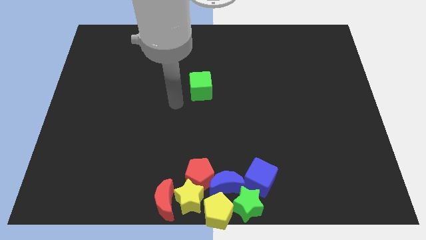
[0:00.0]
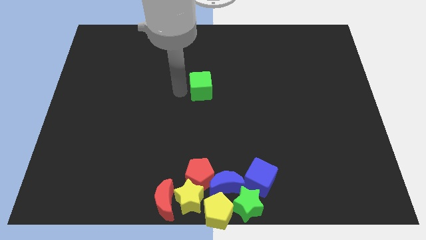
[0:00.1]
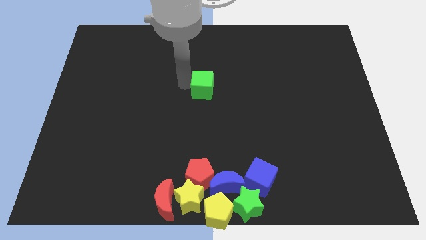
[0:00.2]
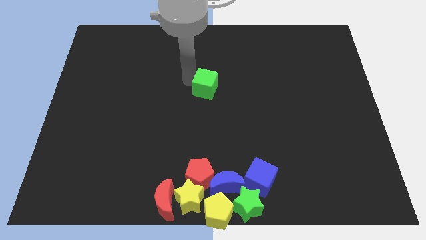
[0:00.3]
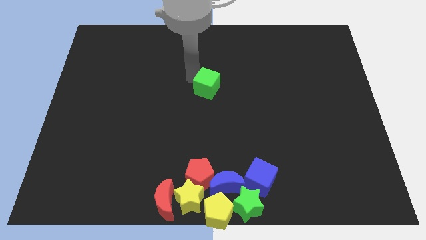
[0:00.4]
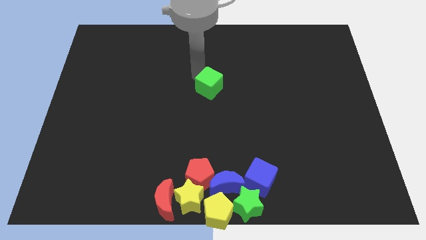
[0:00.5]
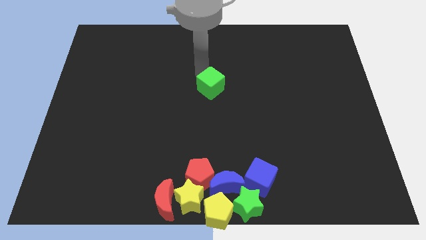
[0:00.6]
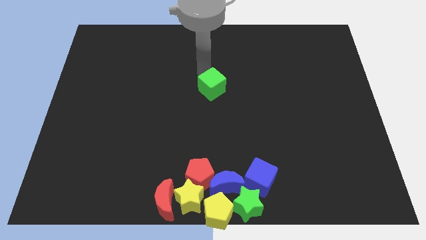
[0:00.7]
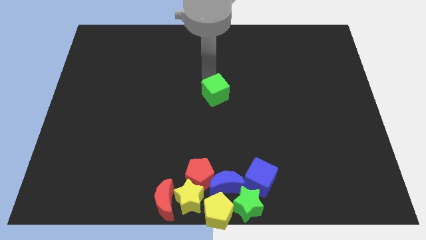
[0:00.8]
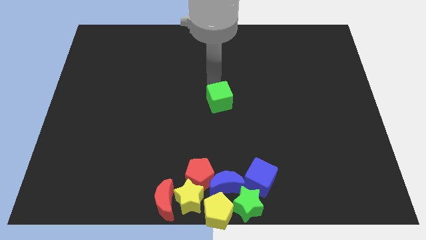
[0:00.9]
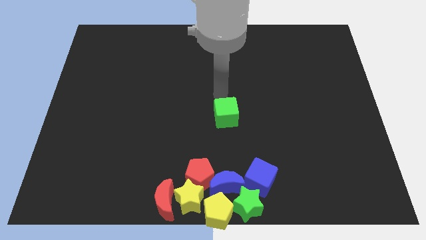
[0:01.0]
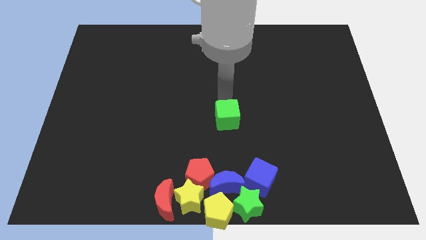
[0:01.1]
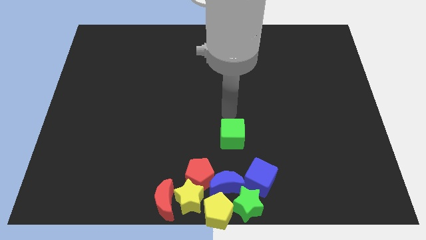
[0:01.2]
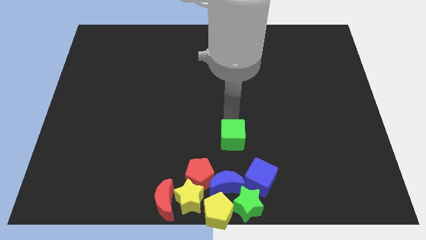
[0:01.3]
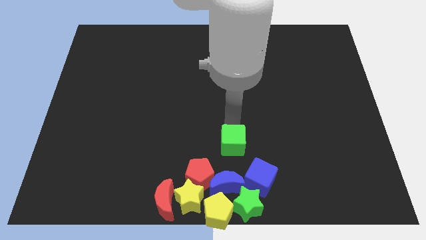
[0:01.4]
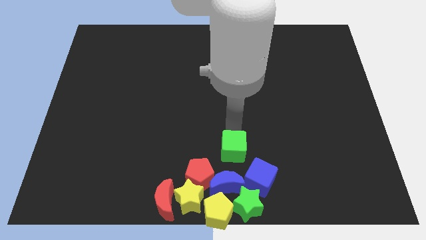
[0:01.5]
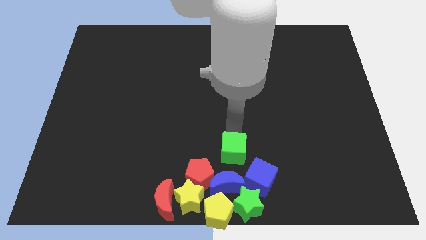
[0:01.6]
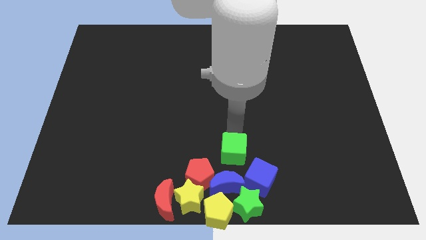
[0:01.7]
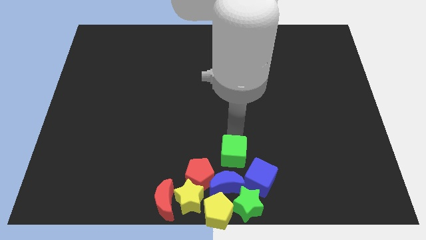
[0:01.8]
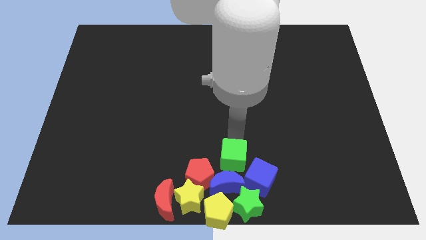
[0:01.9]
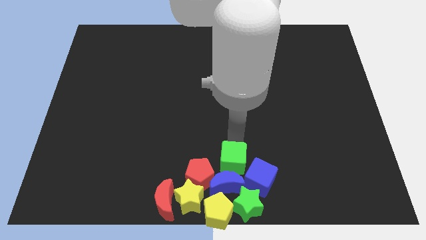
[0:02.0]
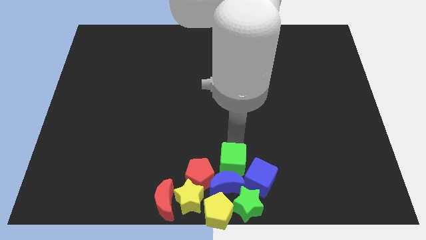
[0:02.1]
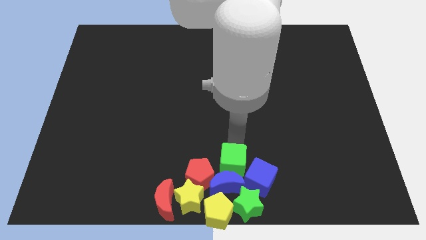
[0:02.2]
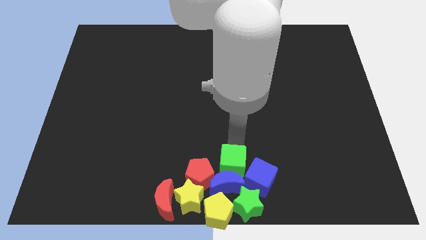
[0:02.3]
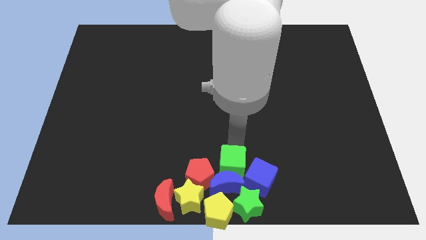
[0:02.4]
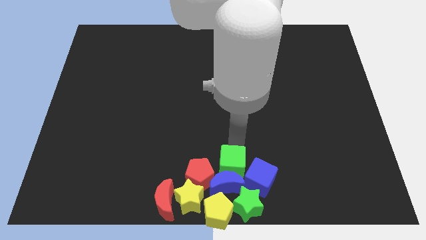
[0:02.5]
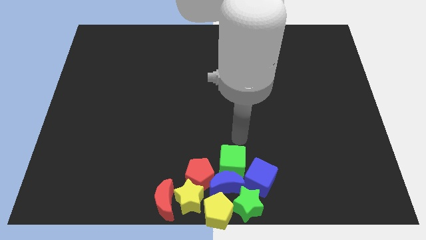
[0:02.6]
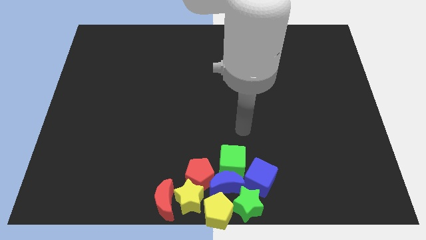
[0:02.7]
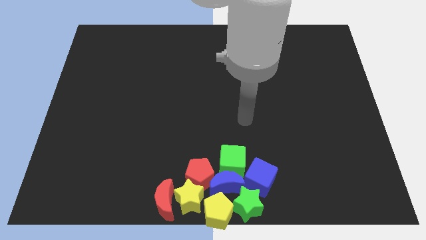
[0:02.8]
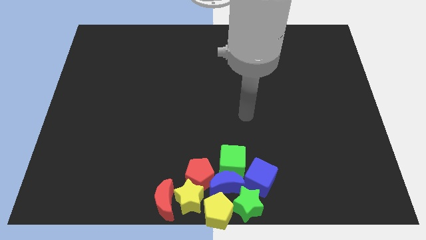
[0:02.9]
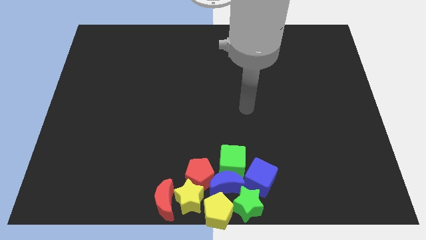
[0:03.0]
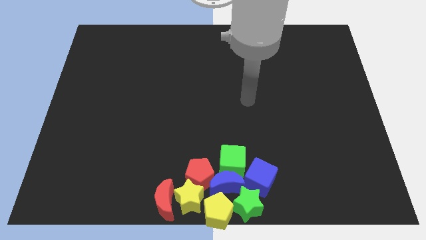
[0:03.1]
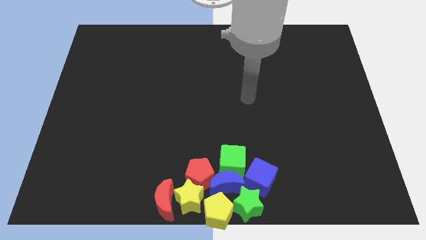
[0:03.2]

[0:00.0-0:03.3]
place the green cube above the group of blocks

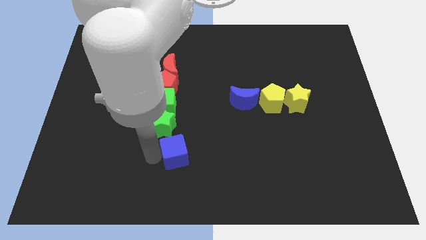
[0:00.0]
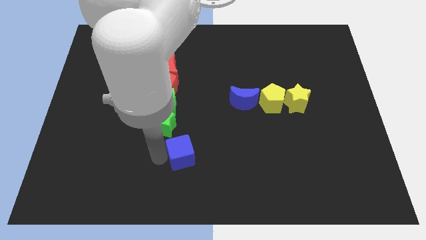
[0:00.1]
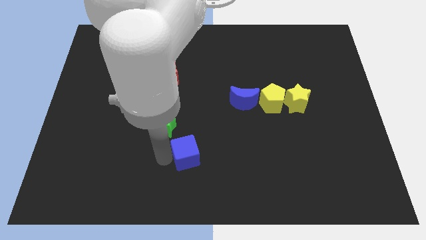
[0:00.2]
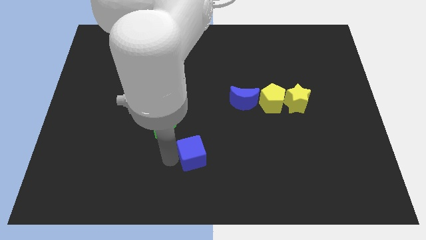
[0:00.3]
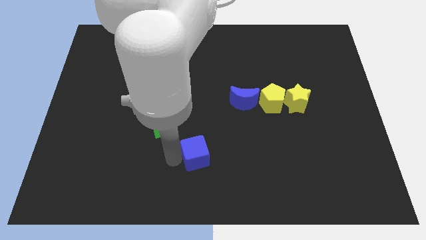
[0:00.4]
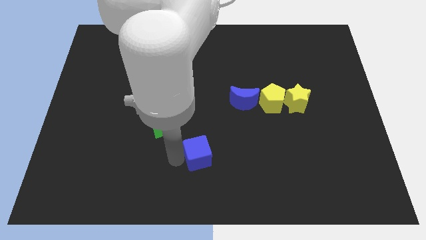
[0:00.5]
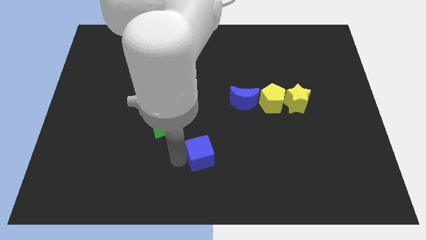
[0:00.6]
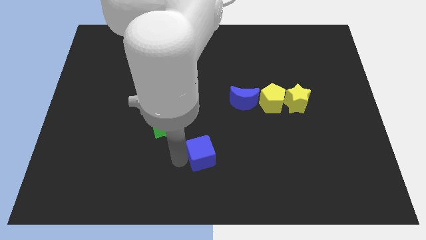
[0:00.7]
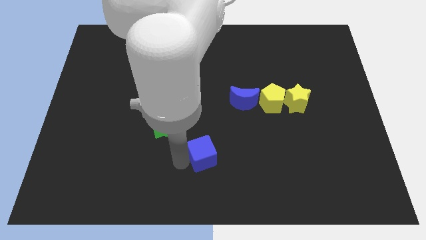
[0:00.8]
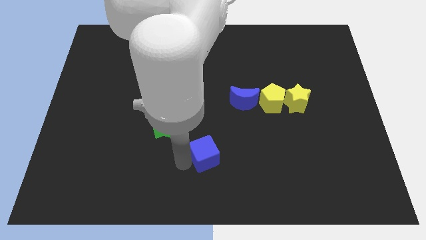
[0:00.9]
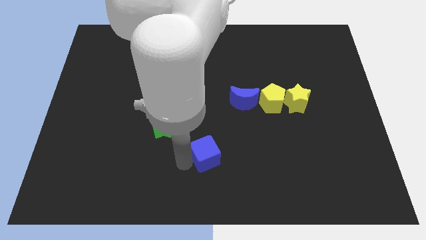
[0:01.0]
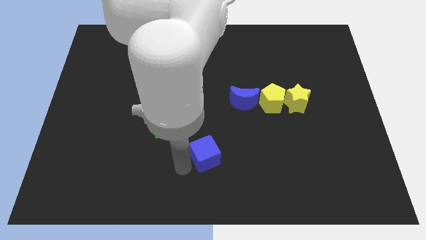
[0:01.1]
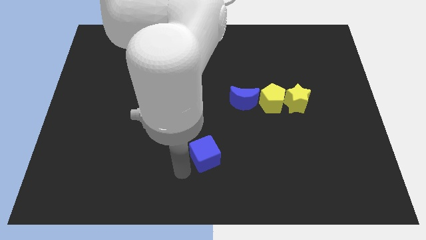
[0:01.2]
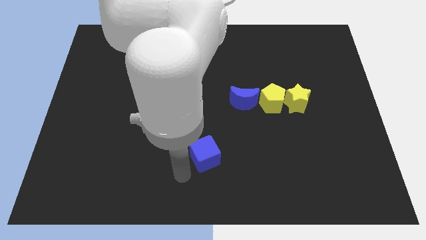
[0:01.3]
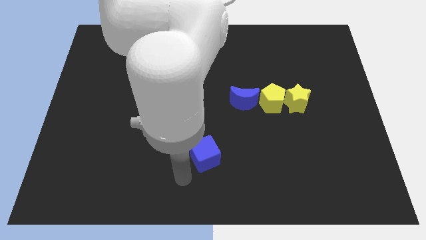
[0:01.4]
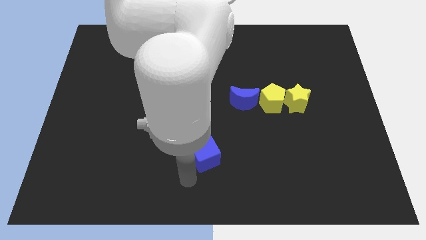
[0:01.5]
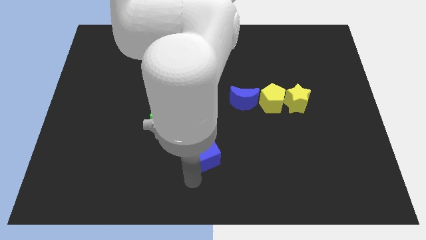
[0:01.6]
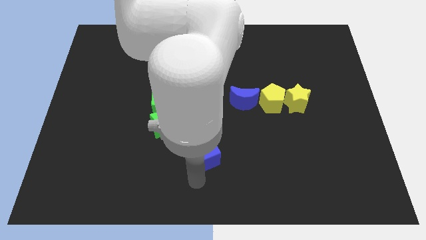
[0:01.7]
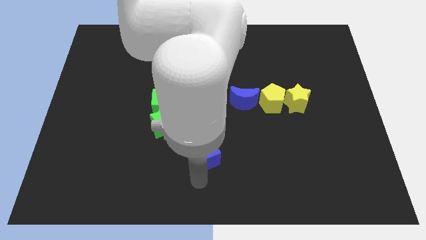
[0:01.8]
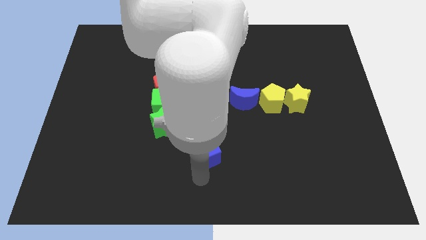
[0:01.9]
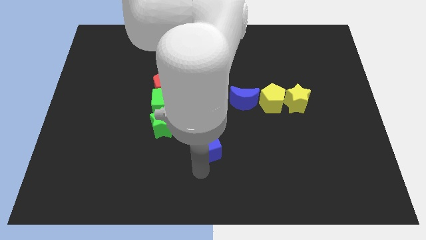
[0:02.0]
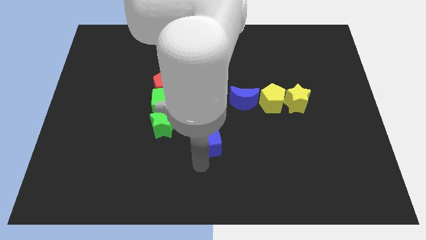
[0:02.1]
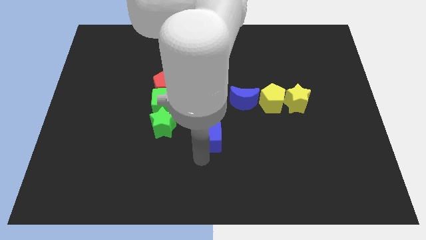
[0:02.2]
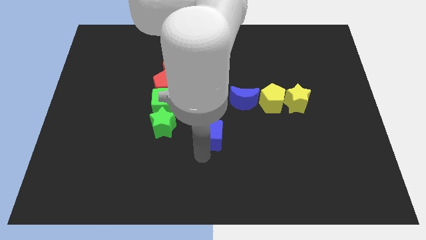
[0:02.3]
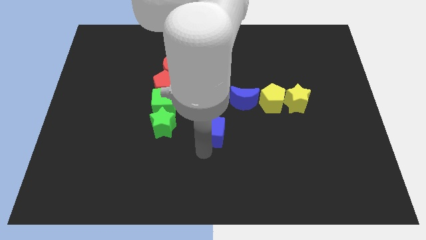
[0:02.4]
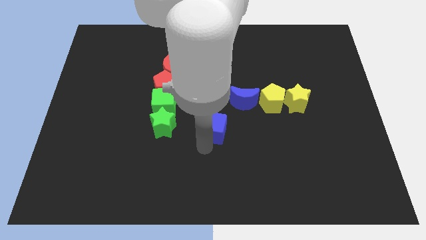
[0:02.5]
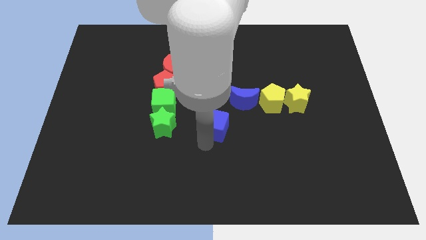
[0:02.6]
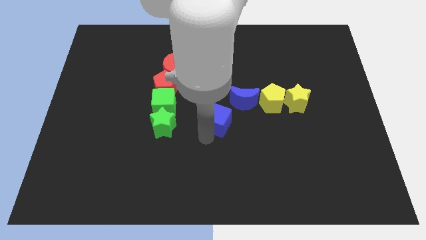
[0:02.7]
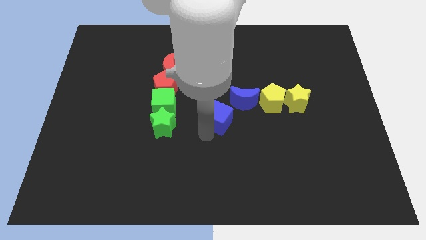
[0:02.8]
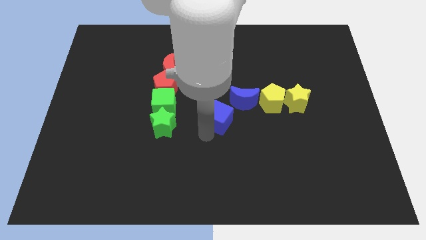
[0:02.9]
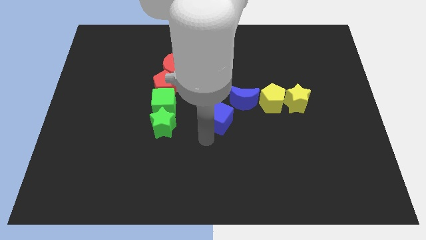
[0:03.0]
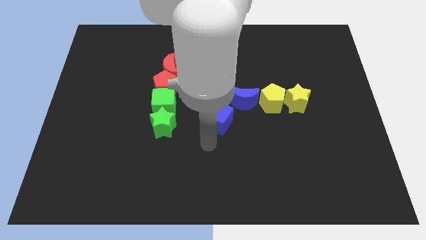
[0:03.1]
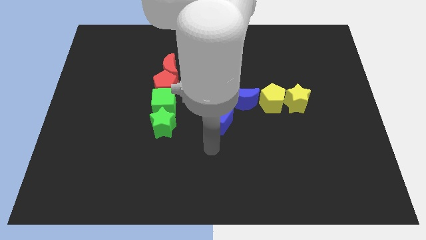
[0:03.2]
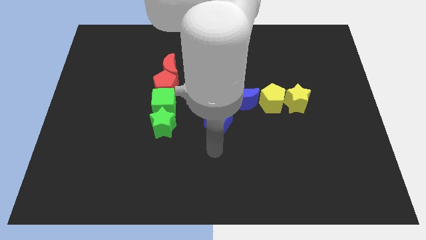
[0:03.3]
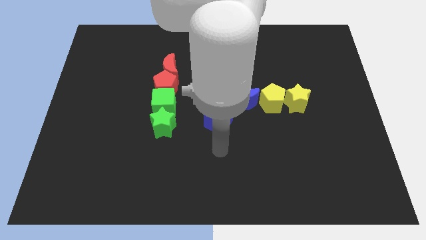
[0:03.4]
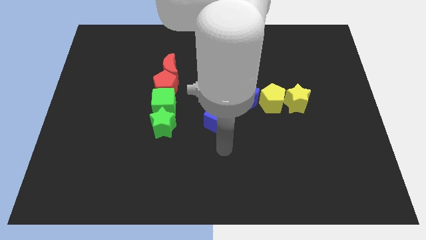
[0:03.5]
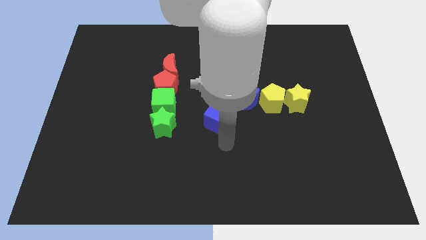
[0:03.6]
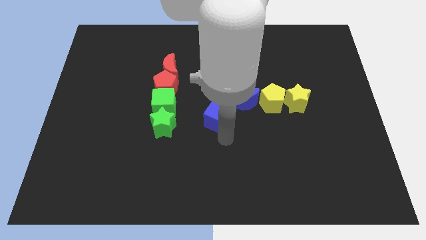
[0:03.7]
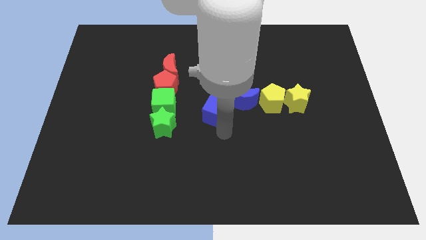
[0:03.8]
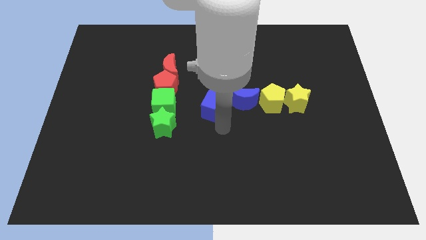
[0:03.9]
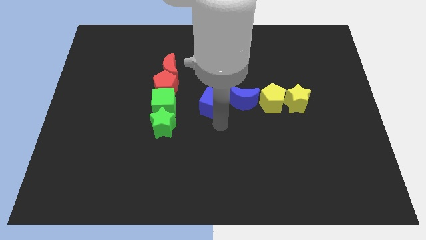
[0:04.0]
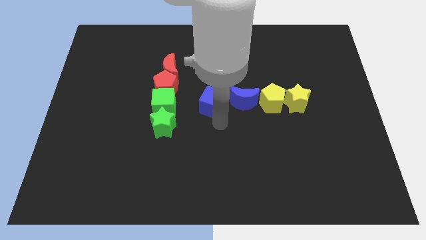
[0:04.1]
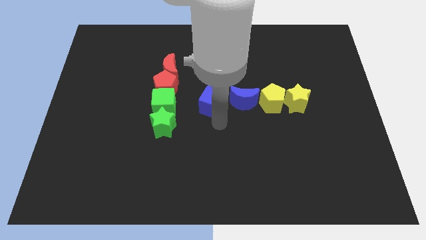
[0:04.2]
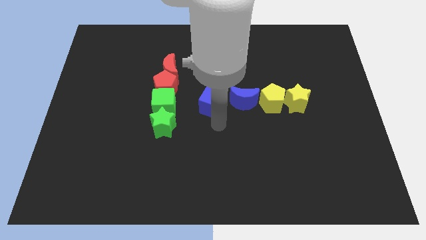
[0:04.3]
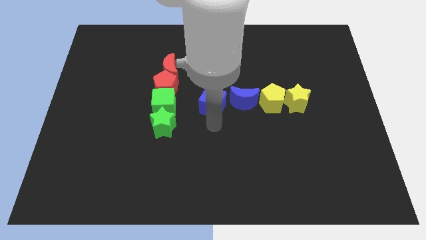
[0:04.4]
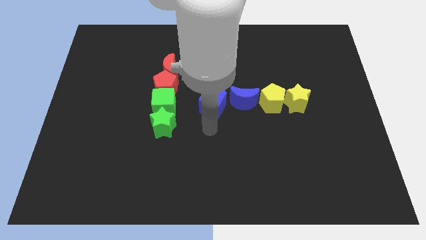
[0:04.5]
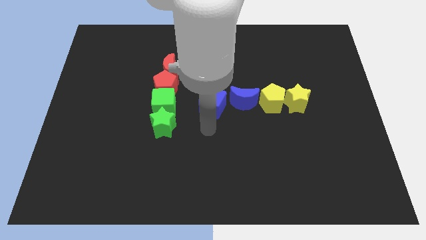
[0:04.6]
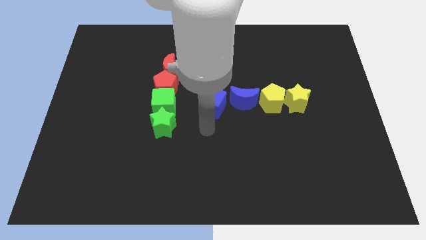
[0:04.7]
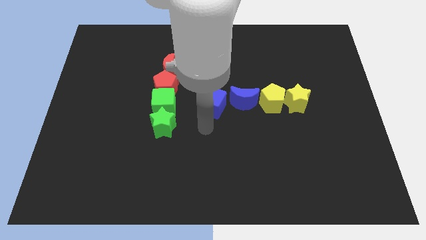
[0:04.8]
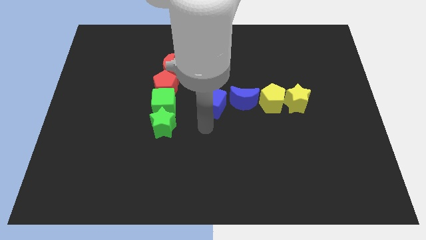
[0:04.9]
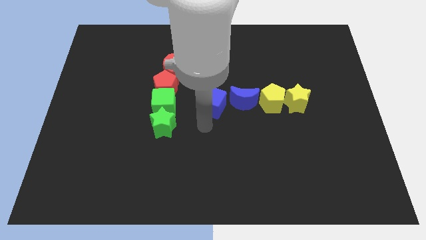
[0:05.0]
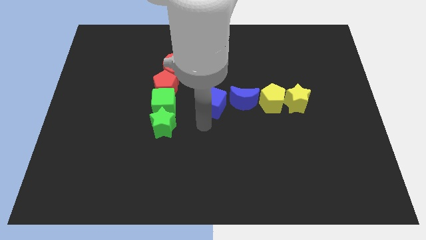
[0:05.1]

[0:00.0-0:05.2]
move the blue cube to the left of the blue crescent

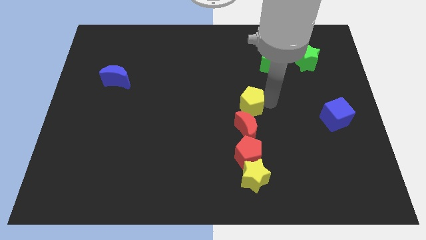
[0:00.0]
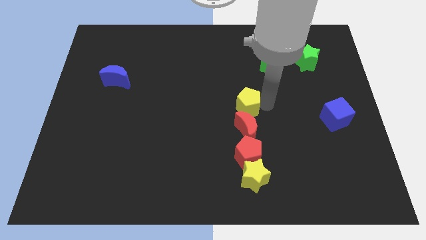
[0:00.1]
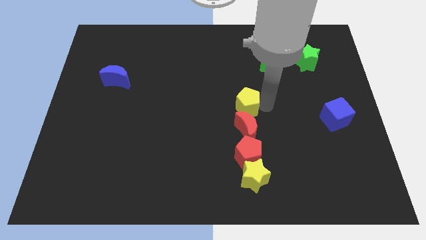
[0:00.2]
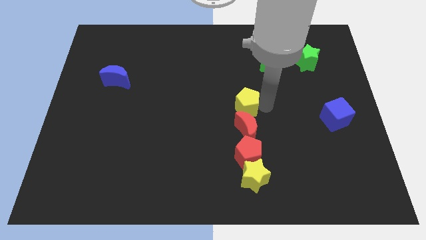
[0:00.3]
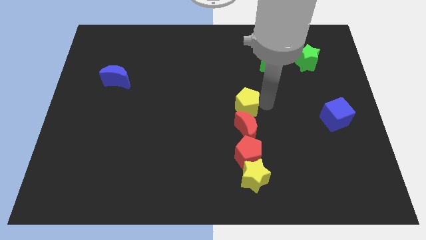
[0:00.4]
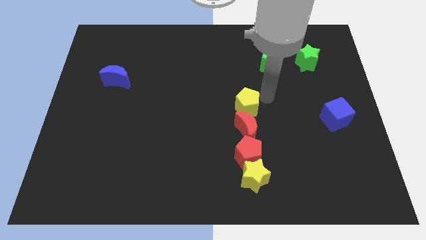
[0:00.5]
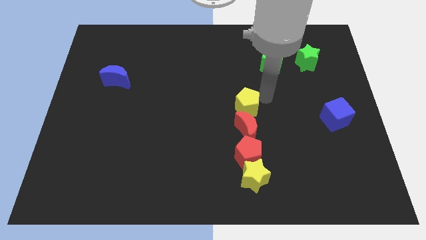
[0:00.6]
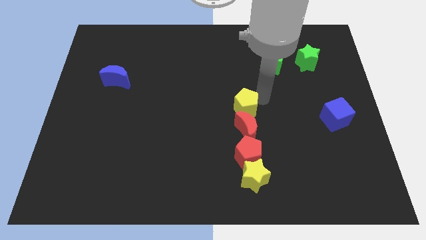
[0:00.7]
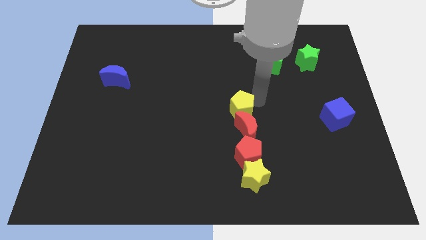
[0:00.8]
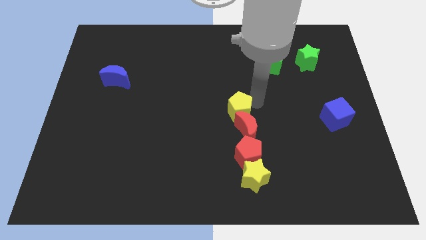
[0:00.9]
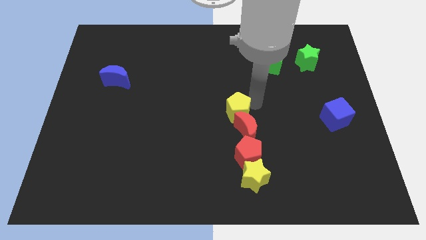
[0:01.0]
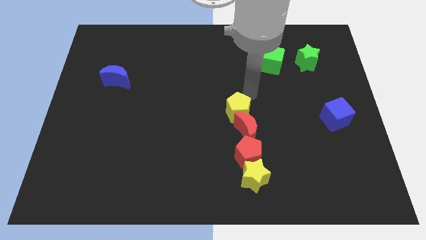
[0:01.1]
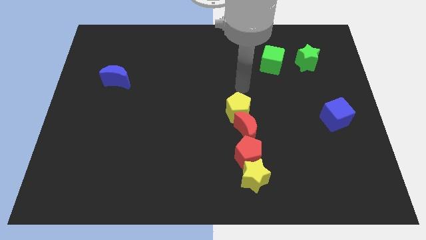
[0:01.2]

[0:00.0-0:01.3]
place the yellow pentagon above the red moon
